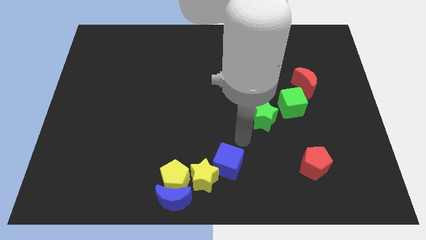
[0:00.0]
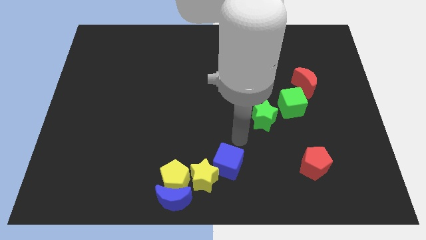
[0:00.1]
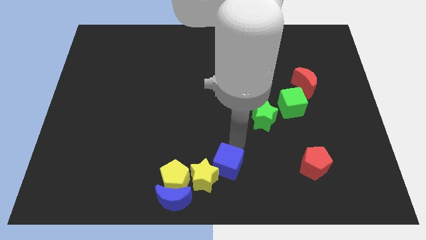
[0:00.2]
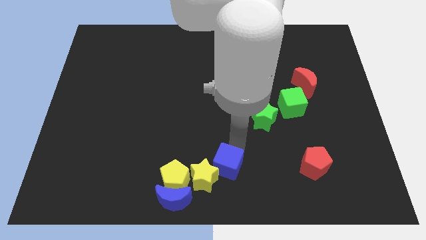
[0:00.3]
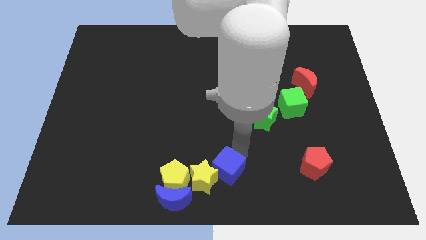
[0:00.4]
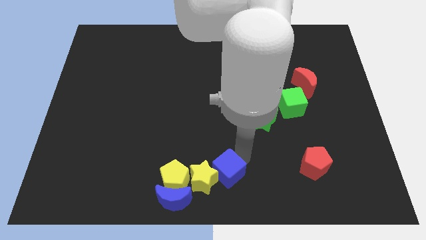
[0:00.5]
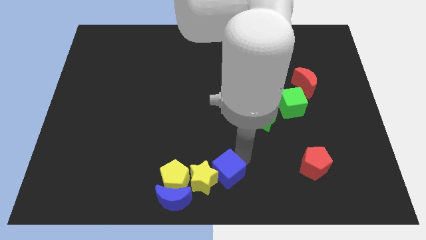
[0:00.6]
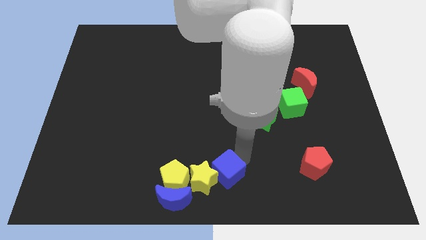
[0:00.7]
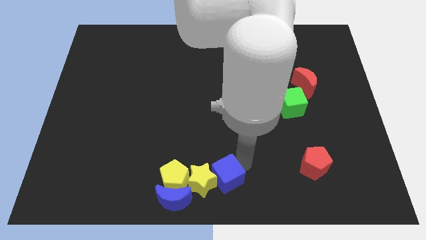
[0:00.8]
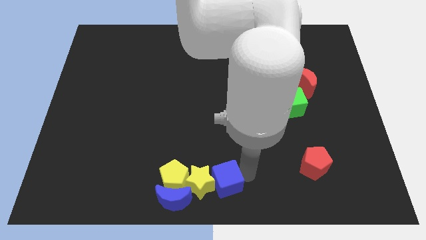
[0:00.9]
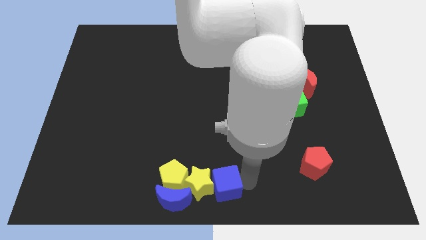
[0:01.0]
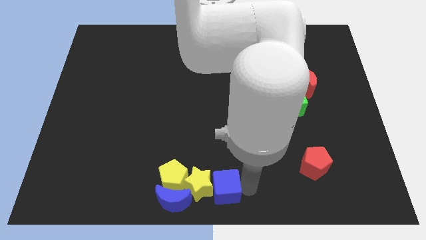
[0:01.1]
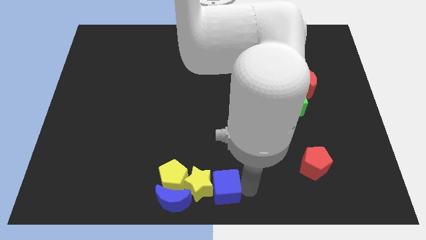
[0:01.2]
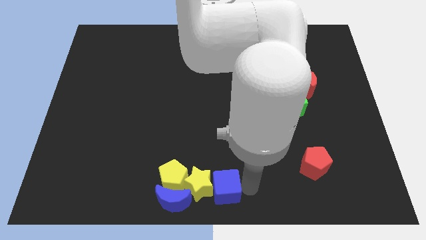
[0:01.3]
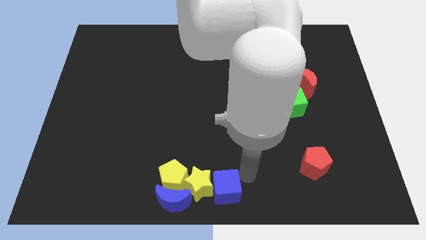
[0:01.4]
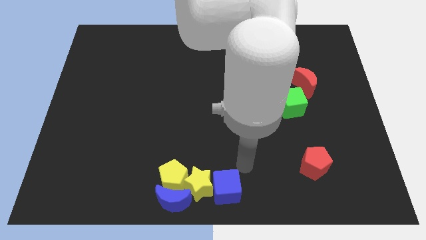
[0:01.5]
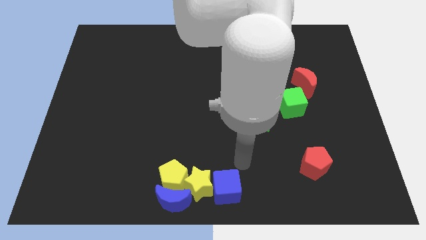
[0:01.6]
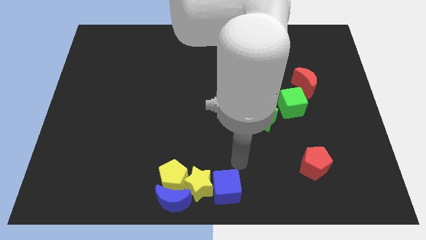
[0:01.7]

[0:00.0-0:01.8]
move blue cube to the bottom center of the board

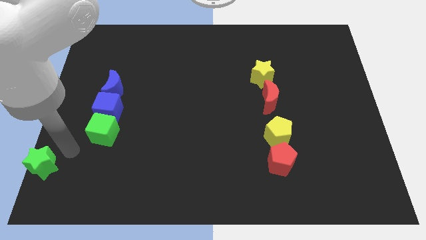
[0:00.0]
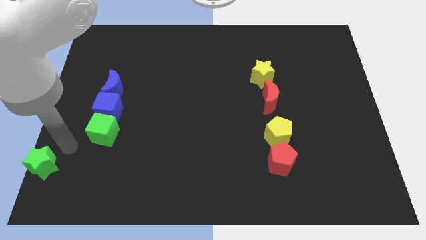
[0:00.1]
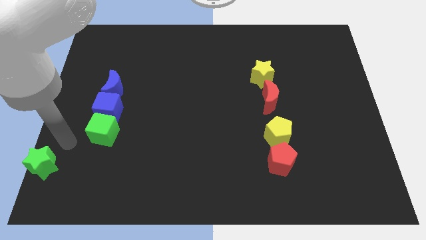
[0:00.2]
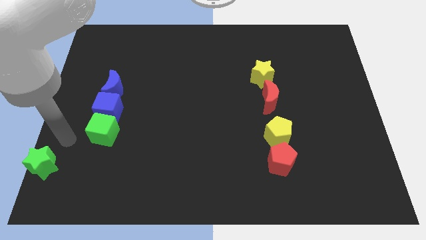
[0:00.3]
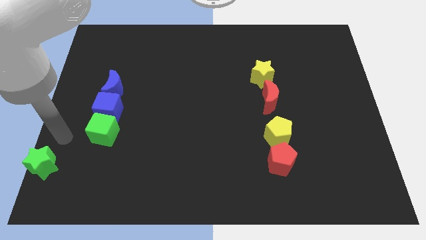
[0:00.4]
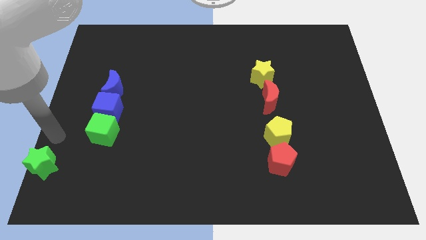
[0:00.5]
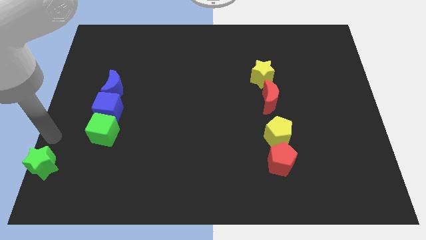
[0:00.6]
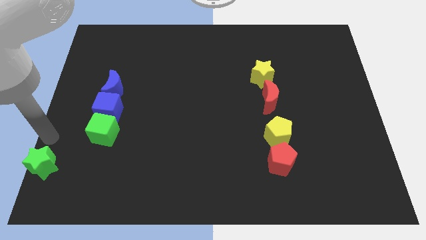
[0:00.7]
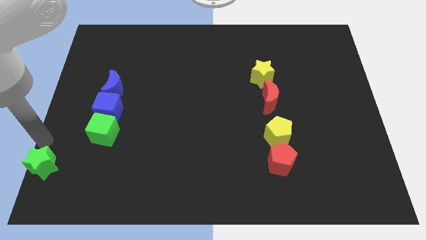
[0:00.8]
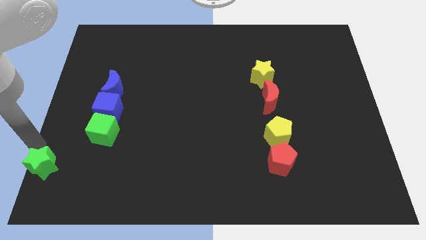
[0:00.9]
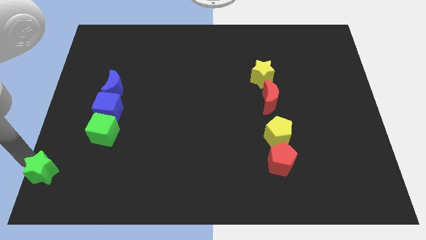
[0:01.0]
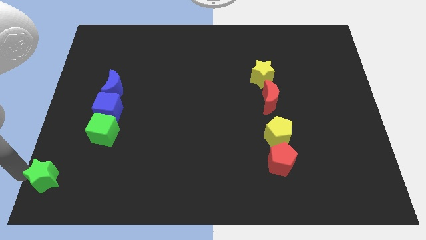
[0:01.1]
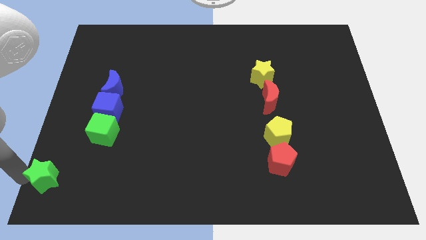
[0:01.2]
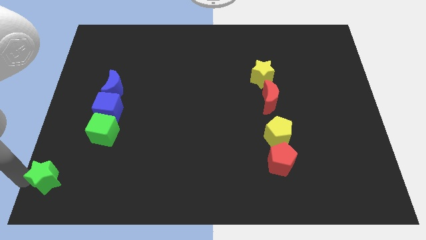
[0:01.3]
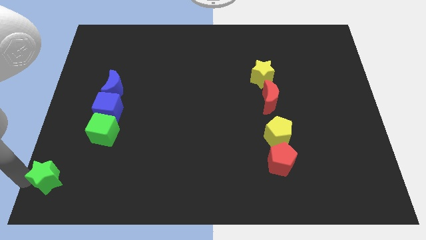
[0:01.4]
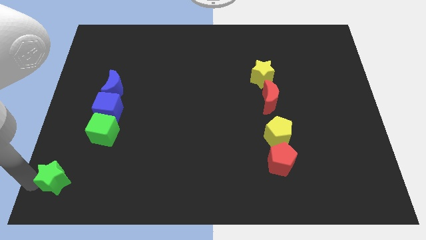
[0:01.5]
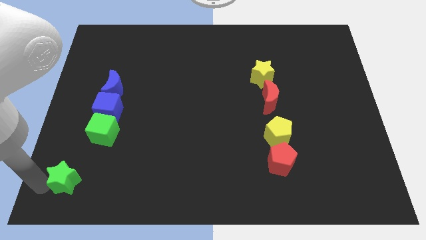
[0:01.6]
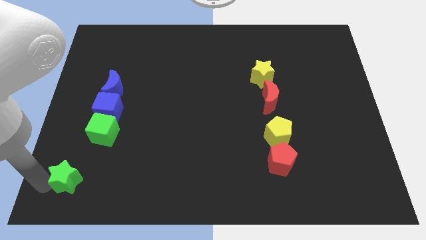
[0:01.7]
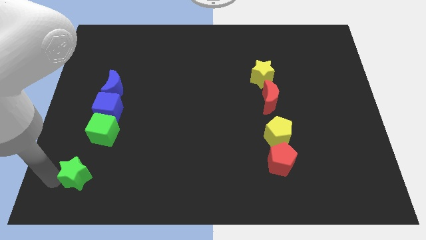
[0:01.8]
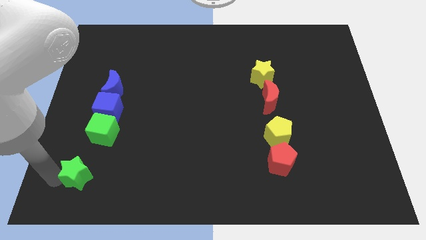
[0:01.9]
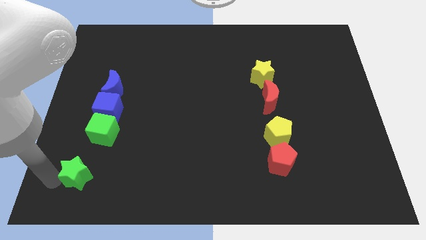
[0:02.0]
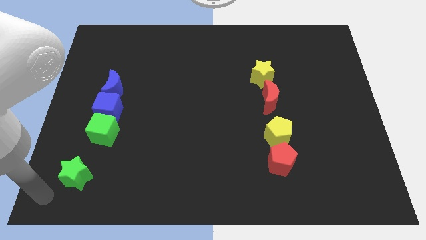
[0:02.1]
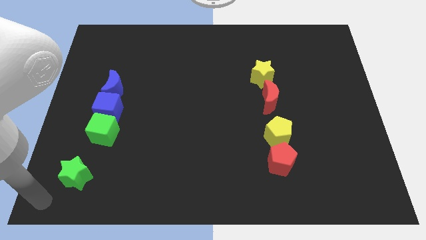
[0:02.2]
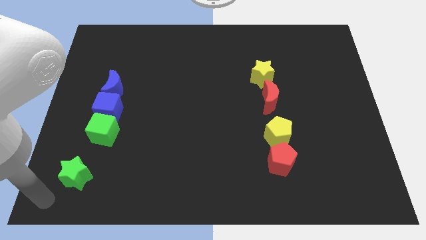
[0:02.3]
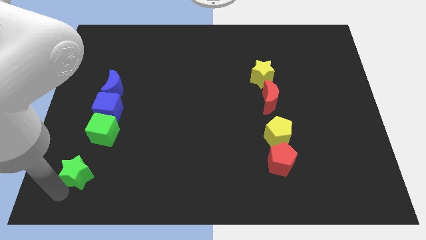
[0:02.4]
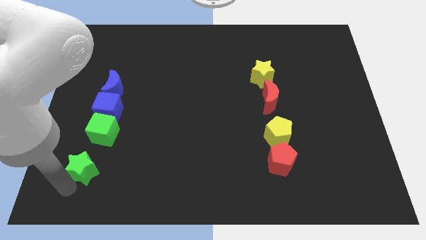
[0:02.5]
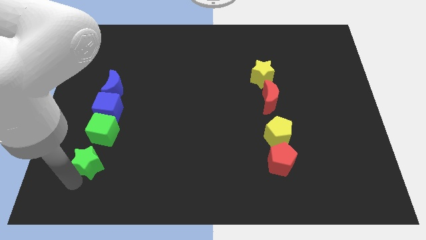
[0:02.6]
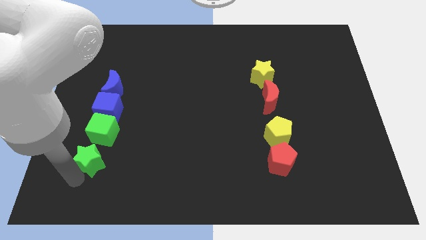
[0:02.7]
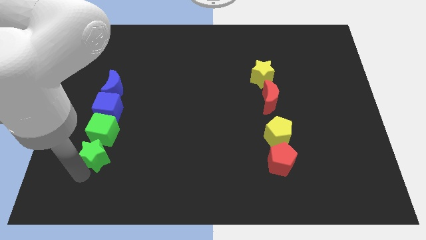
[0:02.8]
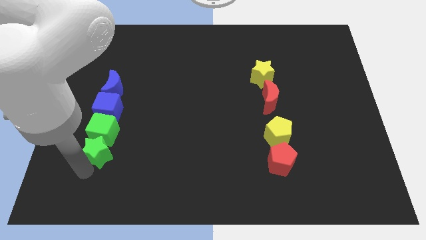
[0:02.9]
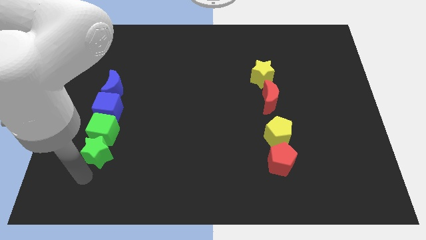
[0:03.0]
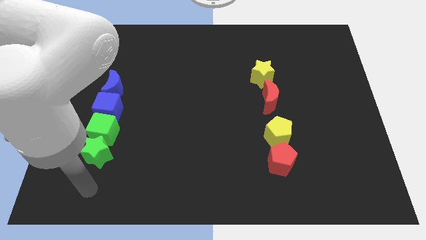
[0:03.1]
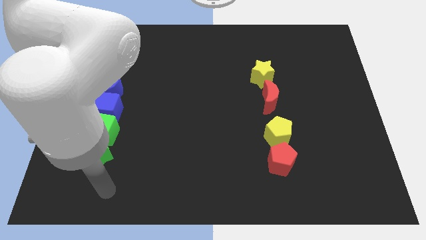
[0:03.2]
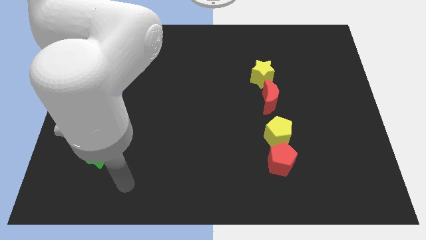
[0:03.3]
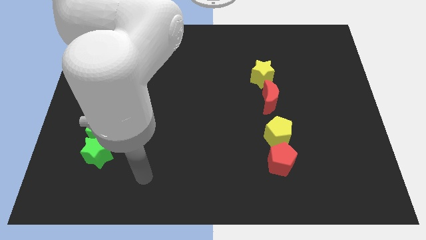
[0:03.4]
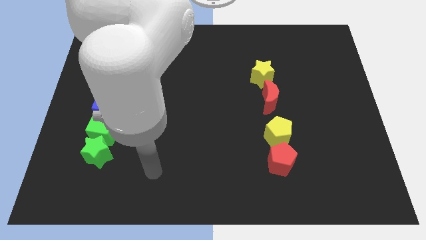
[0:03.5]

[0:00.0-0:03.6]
place the green star to the bottom of the green cube

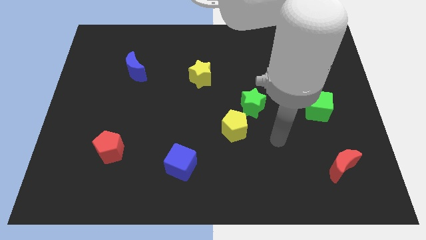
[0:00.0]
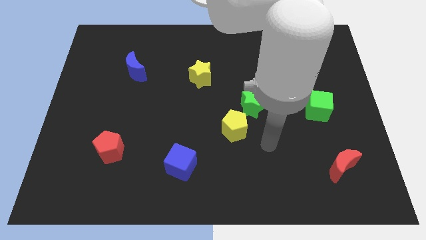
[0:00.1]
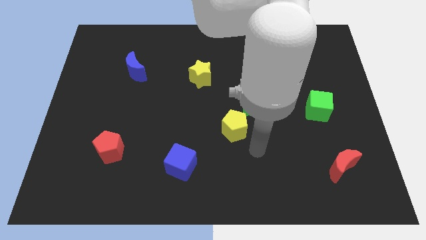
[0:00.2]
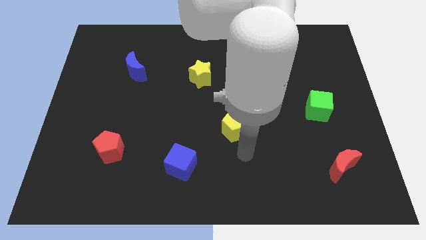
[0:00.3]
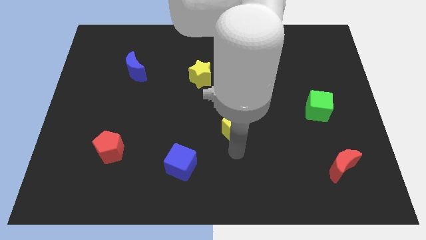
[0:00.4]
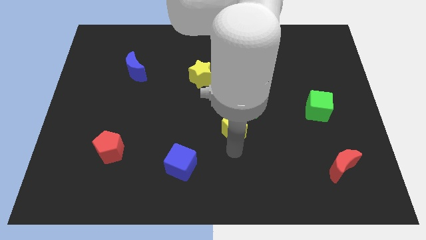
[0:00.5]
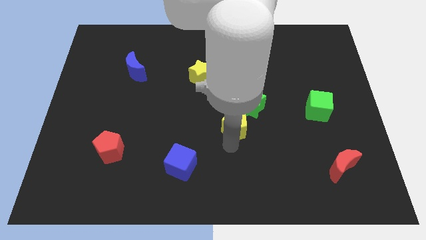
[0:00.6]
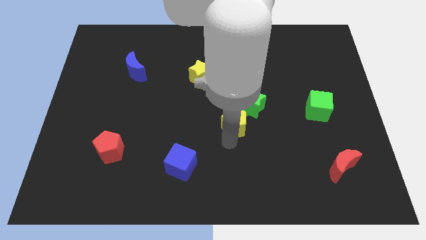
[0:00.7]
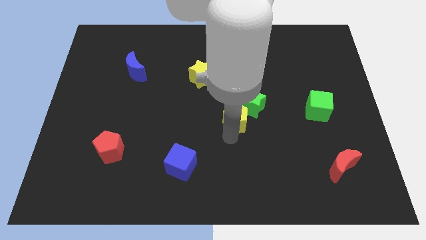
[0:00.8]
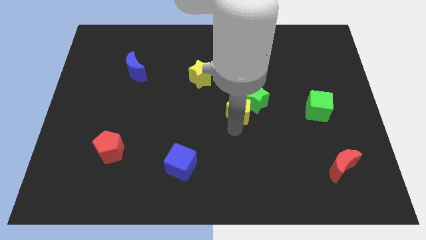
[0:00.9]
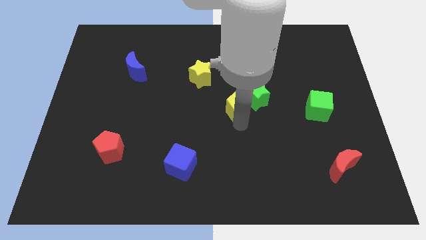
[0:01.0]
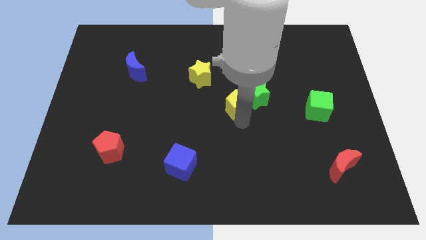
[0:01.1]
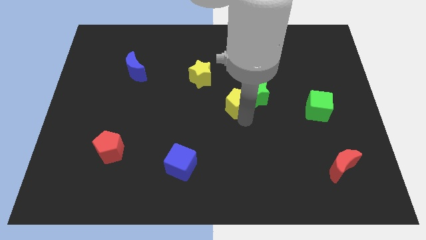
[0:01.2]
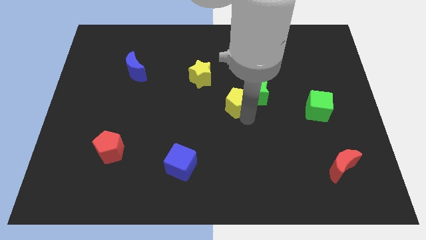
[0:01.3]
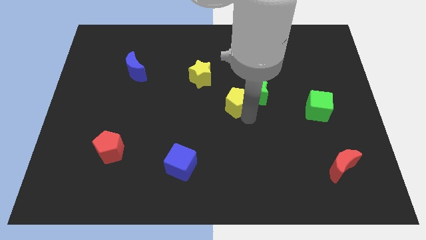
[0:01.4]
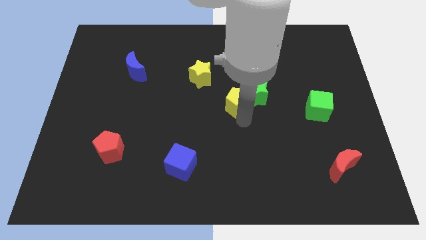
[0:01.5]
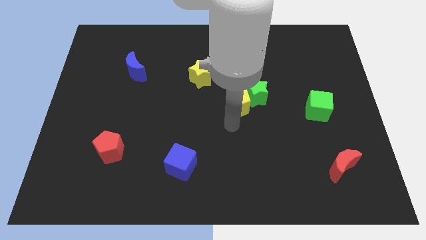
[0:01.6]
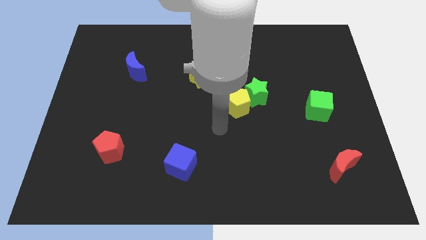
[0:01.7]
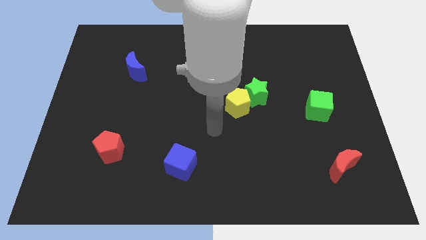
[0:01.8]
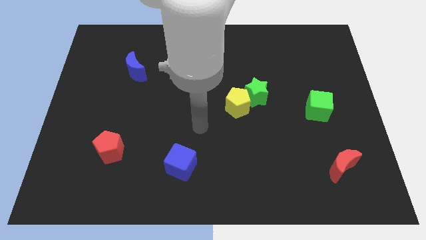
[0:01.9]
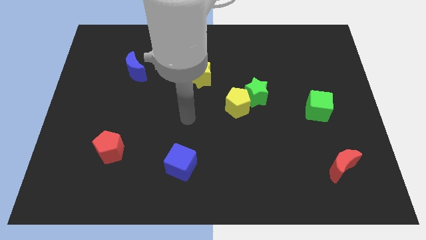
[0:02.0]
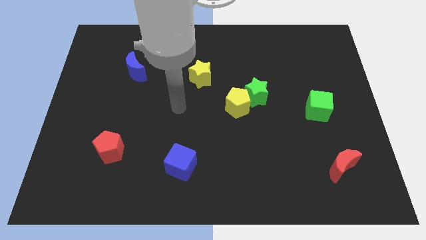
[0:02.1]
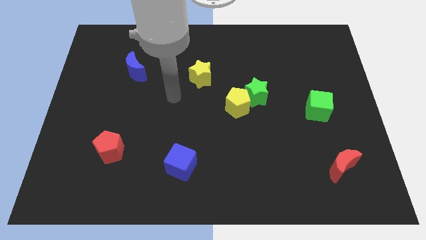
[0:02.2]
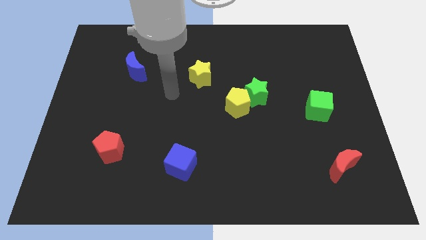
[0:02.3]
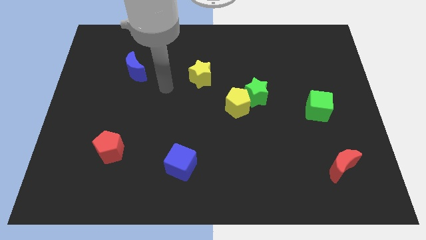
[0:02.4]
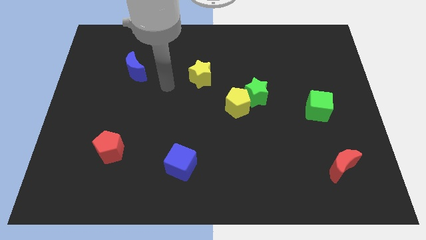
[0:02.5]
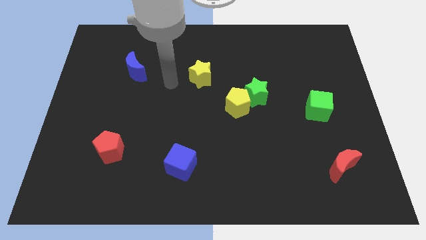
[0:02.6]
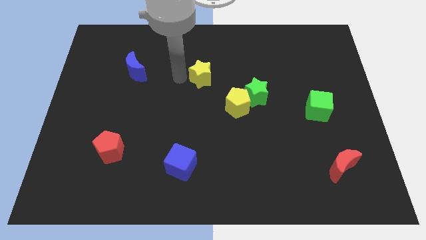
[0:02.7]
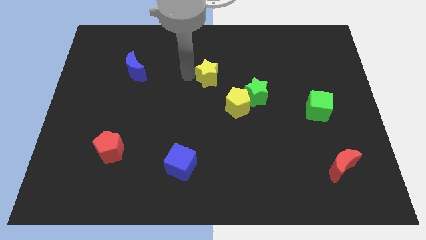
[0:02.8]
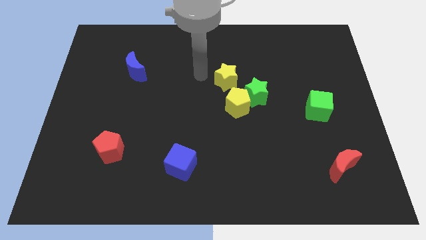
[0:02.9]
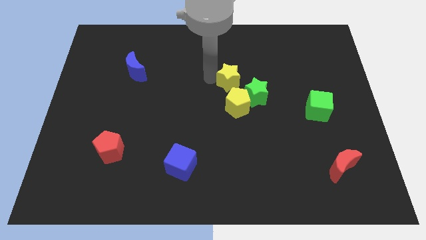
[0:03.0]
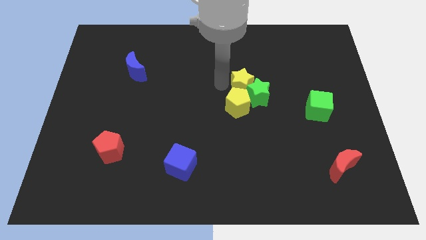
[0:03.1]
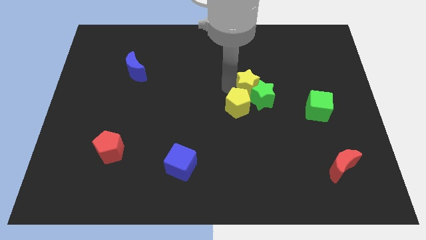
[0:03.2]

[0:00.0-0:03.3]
make a group with green and yellow stars and yellow pentagon

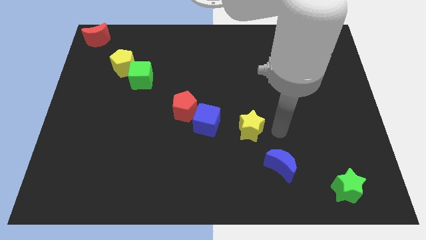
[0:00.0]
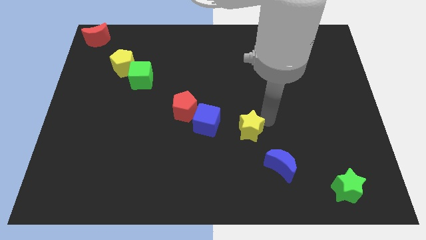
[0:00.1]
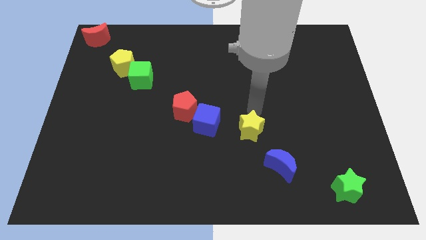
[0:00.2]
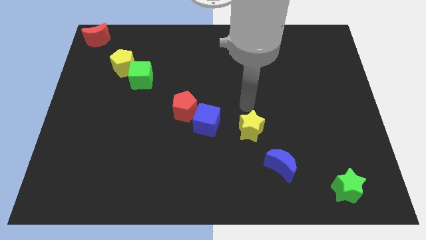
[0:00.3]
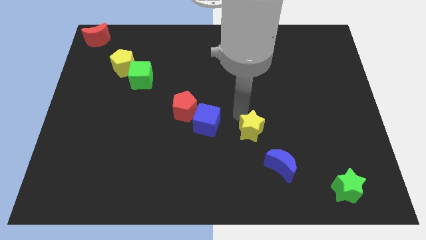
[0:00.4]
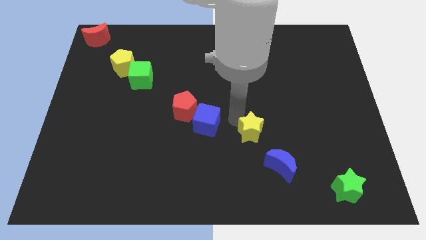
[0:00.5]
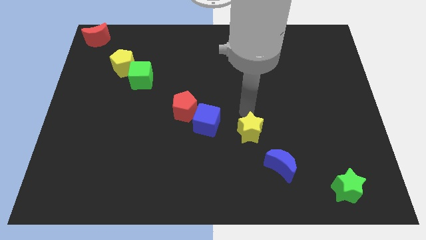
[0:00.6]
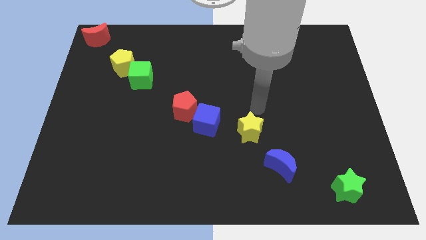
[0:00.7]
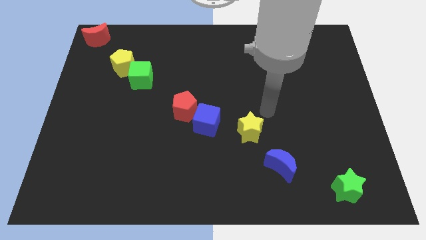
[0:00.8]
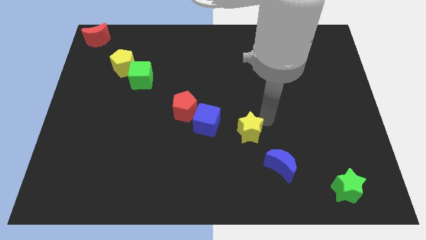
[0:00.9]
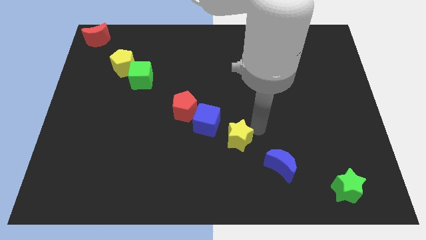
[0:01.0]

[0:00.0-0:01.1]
slide yellow star to the right of blue cube
